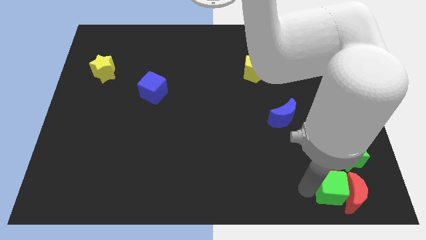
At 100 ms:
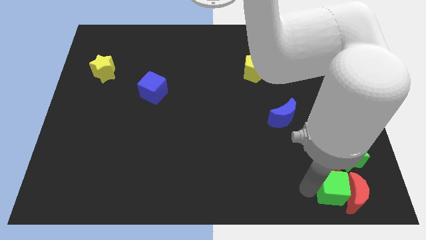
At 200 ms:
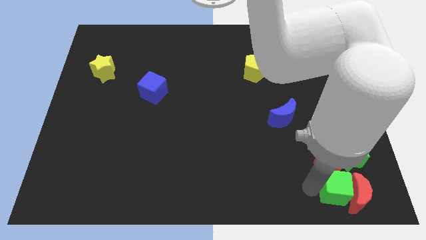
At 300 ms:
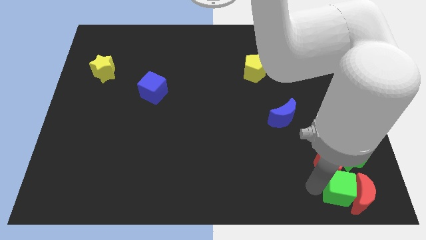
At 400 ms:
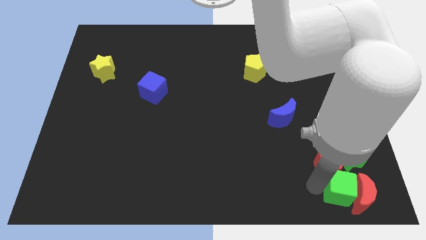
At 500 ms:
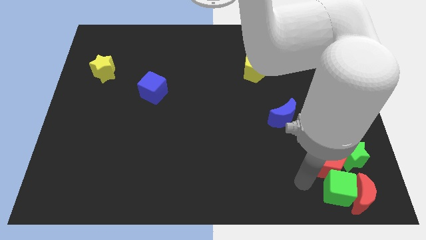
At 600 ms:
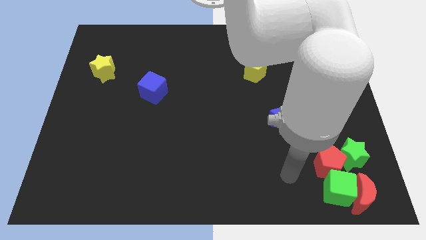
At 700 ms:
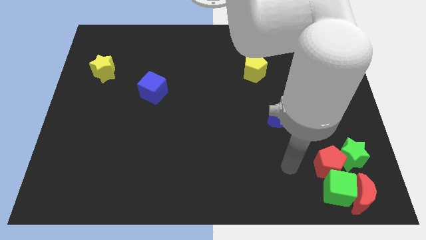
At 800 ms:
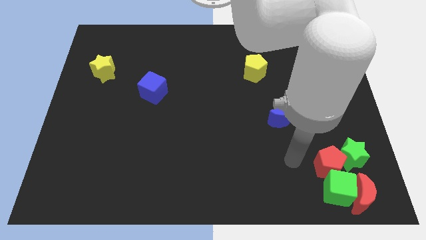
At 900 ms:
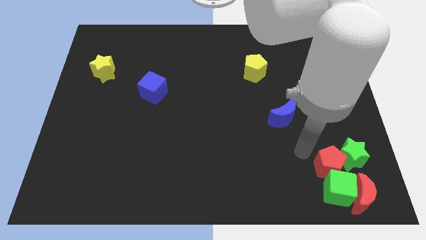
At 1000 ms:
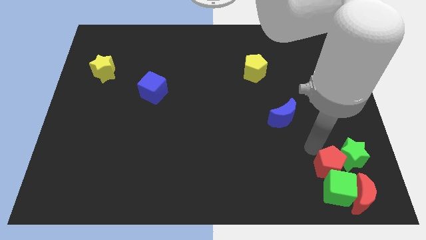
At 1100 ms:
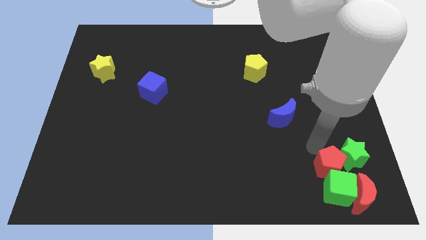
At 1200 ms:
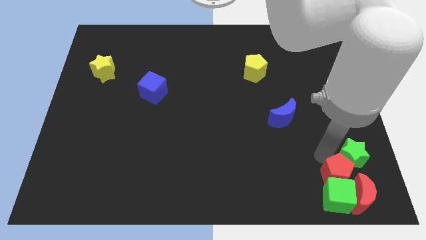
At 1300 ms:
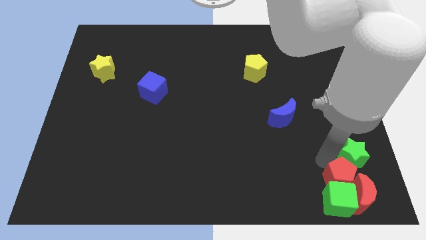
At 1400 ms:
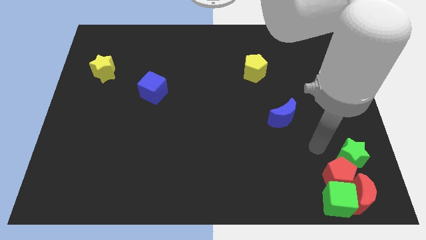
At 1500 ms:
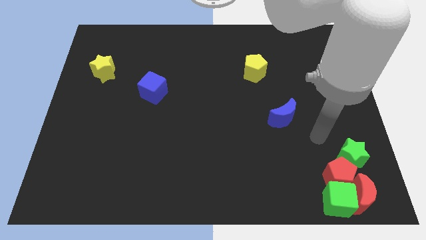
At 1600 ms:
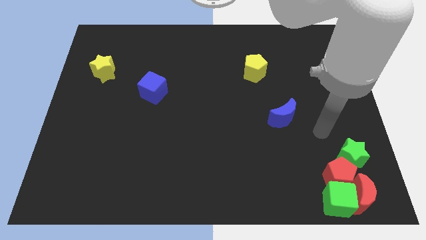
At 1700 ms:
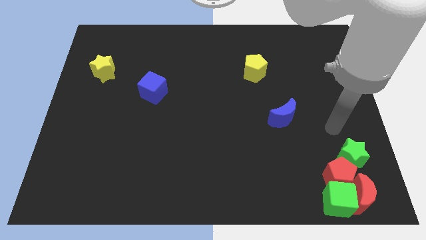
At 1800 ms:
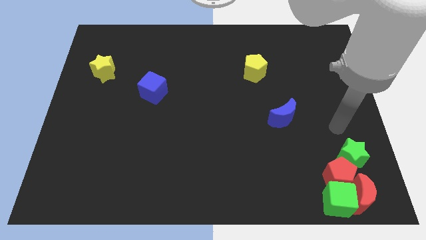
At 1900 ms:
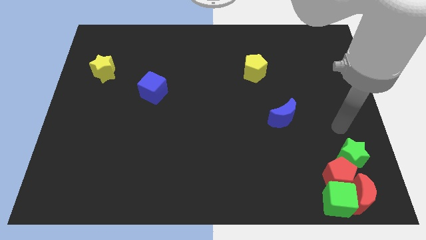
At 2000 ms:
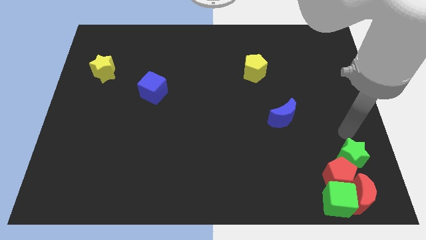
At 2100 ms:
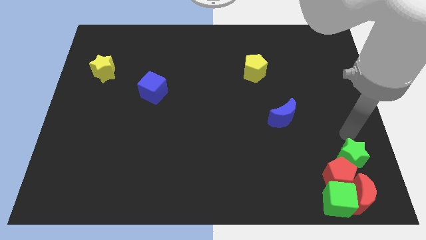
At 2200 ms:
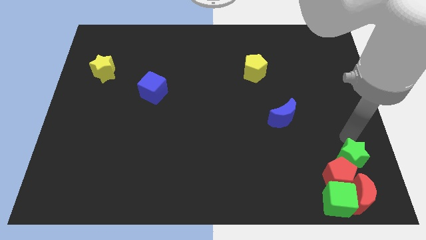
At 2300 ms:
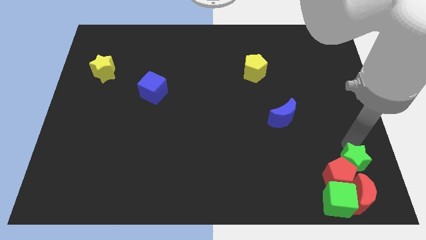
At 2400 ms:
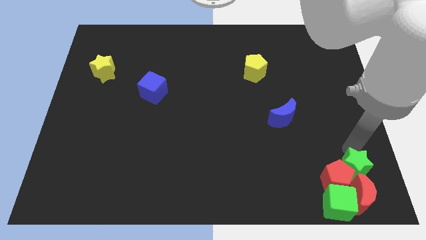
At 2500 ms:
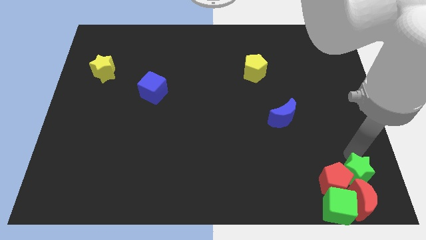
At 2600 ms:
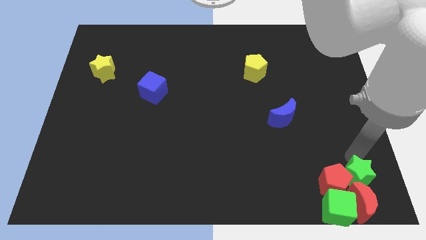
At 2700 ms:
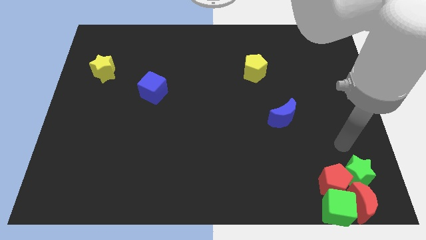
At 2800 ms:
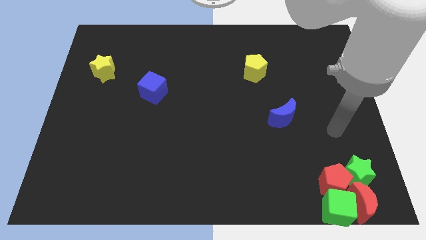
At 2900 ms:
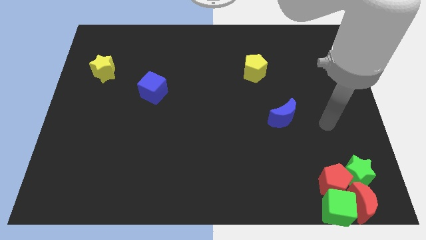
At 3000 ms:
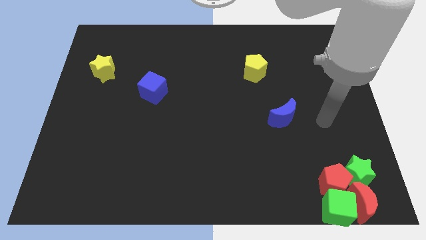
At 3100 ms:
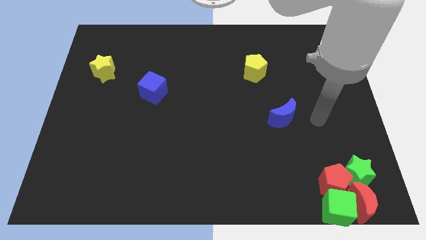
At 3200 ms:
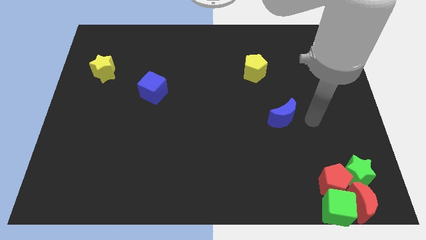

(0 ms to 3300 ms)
push the red pentagon and green star into the green cube and red crescent

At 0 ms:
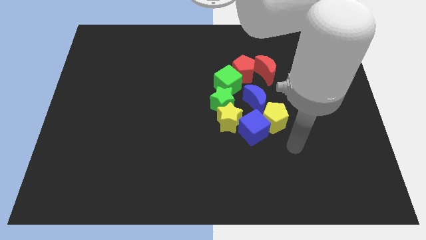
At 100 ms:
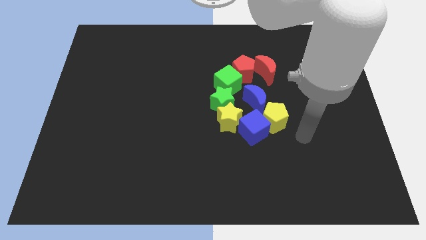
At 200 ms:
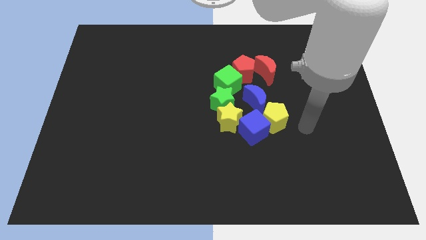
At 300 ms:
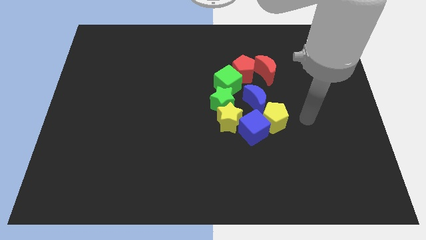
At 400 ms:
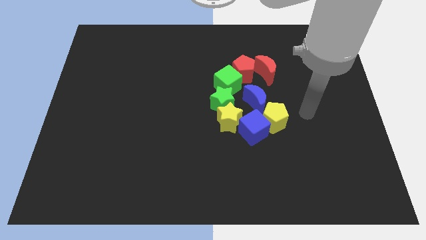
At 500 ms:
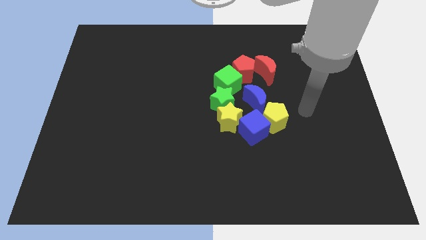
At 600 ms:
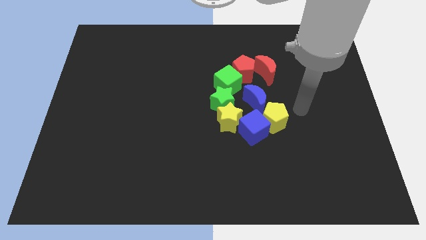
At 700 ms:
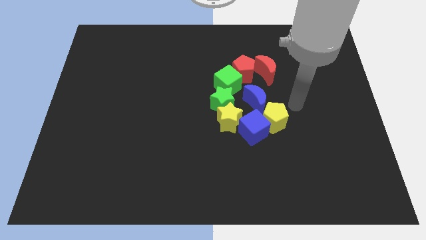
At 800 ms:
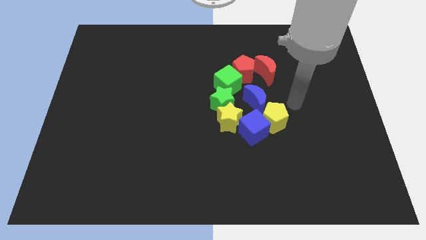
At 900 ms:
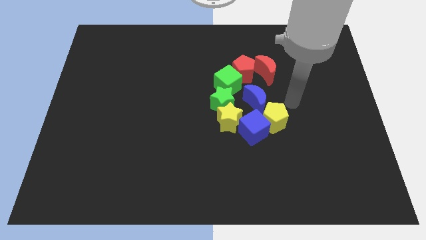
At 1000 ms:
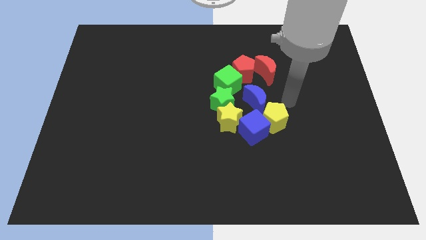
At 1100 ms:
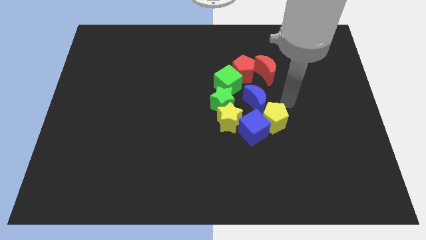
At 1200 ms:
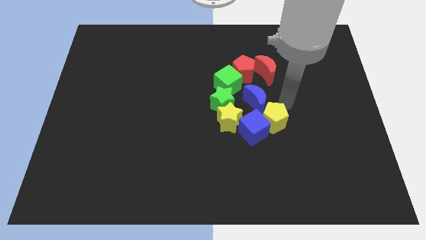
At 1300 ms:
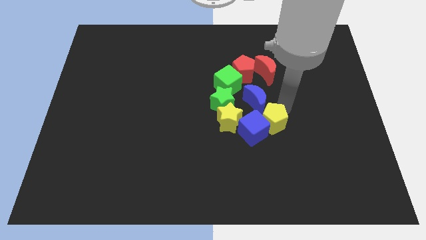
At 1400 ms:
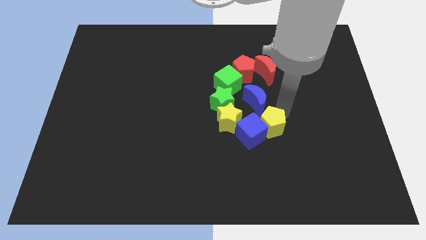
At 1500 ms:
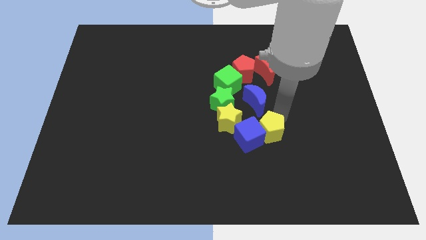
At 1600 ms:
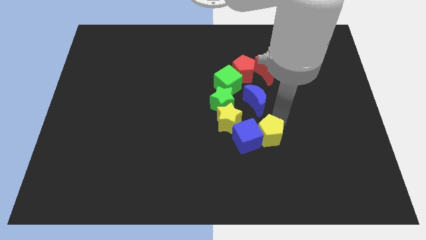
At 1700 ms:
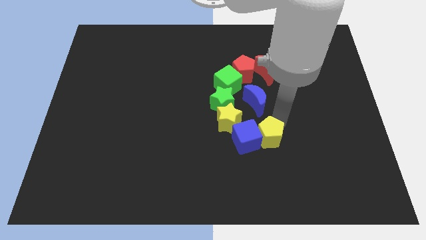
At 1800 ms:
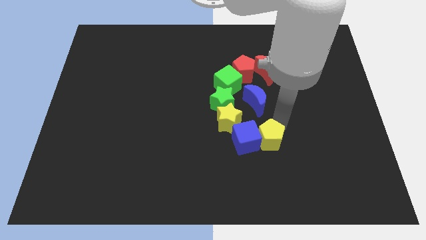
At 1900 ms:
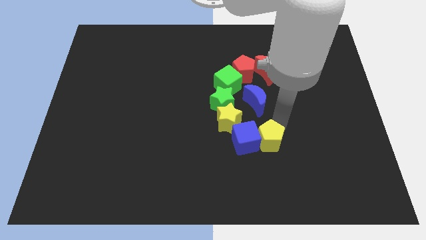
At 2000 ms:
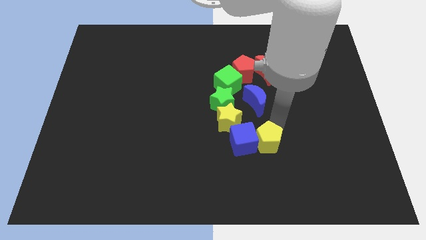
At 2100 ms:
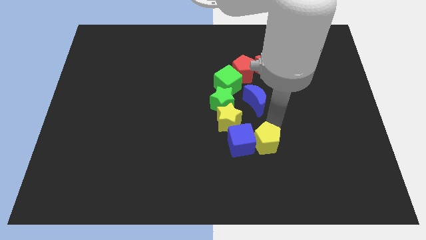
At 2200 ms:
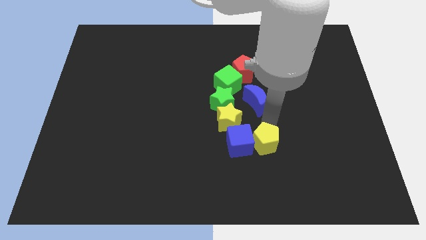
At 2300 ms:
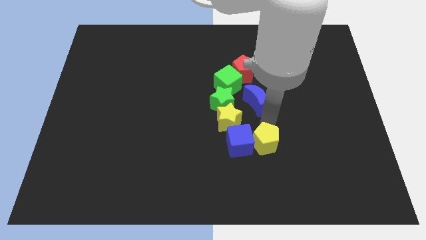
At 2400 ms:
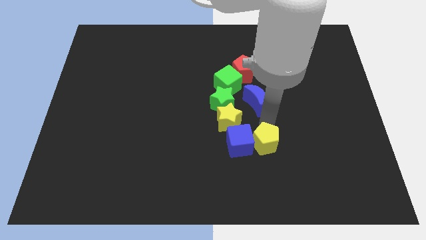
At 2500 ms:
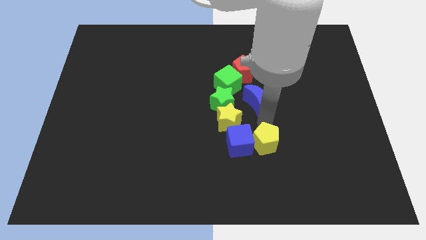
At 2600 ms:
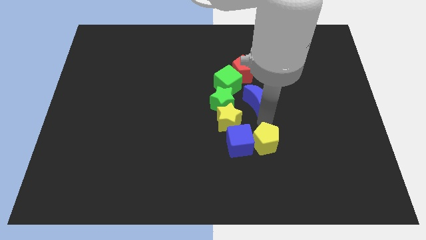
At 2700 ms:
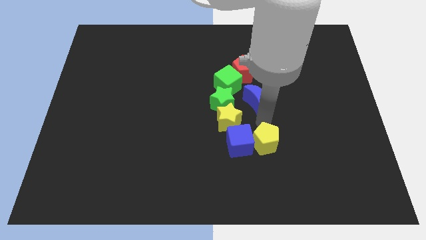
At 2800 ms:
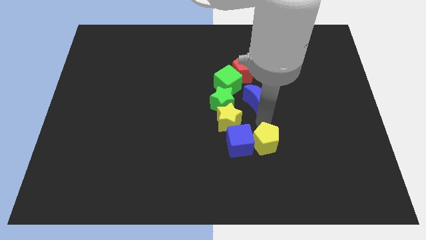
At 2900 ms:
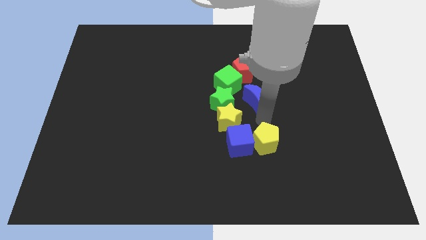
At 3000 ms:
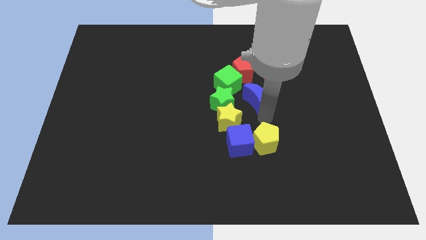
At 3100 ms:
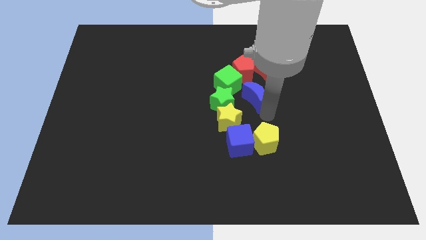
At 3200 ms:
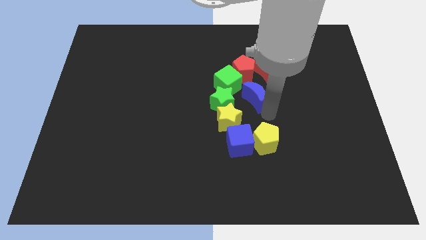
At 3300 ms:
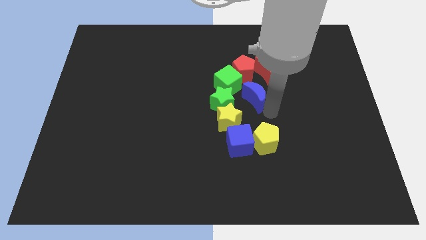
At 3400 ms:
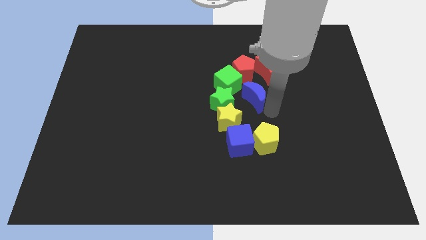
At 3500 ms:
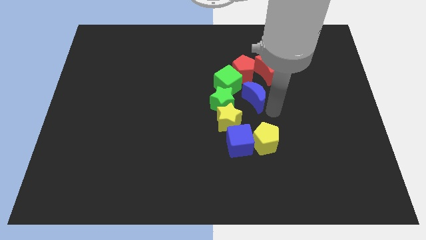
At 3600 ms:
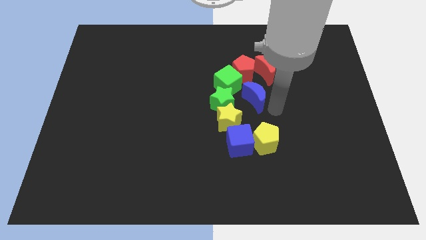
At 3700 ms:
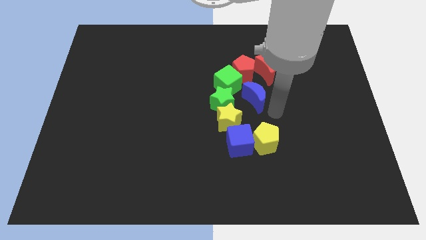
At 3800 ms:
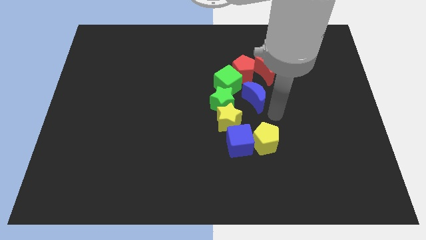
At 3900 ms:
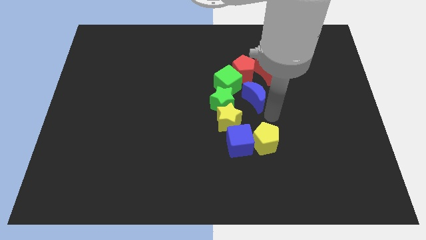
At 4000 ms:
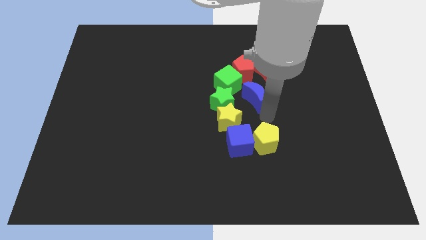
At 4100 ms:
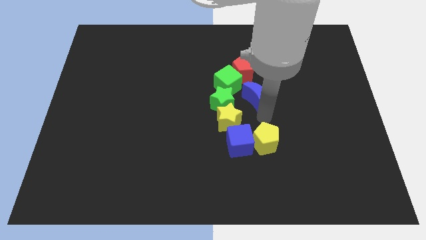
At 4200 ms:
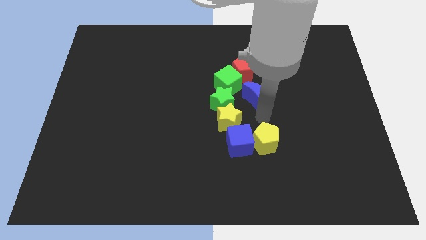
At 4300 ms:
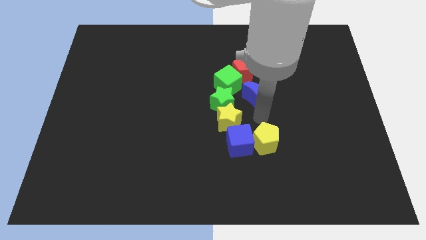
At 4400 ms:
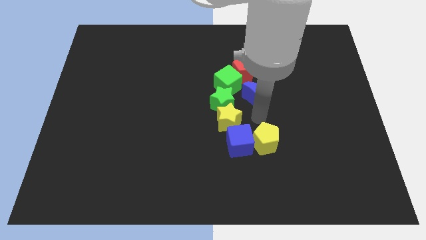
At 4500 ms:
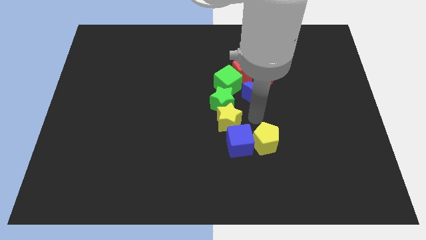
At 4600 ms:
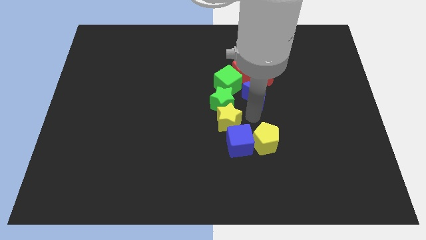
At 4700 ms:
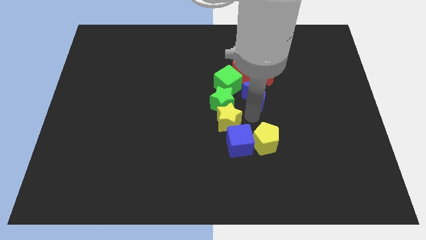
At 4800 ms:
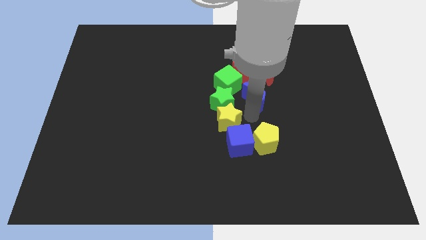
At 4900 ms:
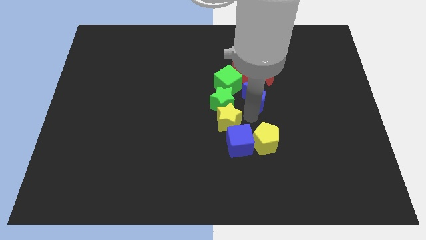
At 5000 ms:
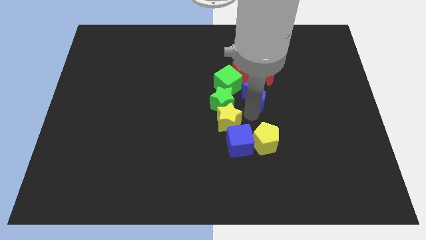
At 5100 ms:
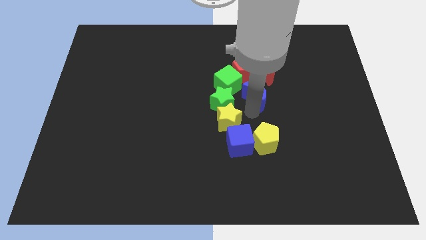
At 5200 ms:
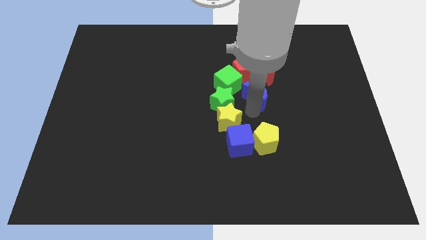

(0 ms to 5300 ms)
push blue cube with yellow pentagon

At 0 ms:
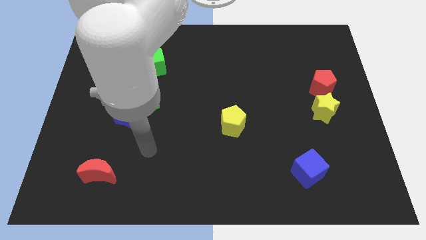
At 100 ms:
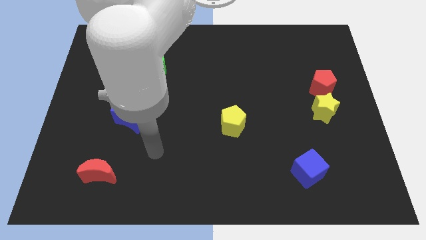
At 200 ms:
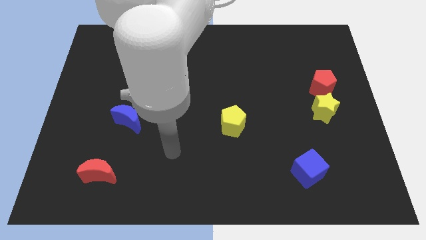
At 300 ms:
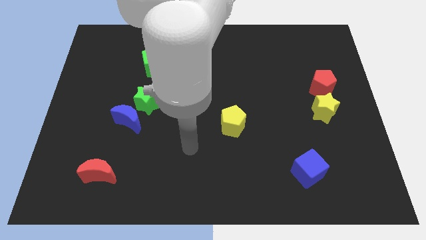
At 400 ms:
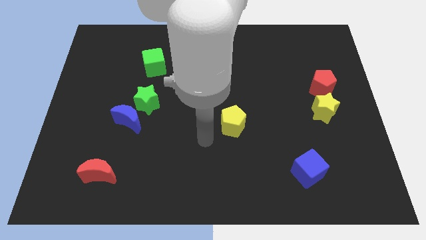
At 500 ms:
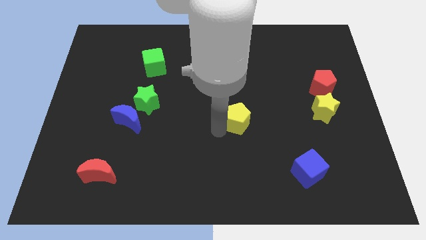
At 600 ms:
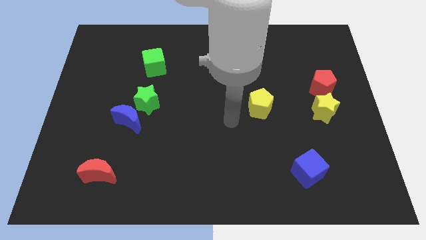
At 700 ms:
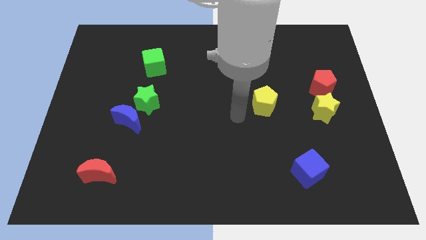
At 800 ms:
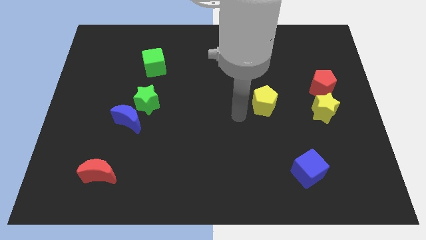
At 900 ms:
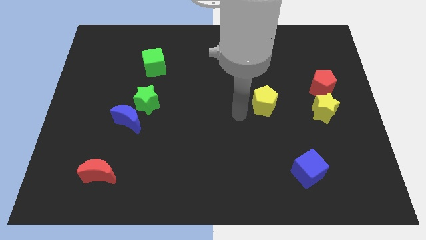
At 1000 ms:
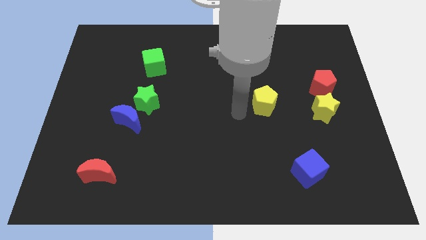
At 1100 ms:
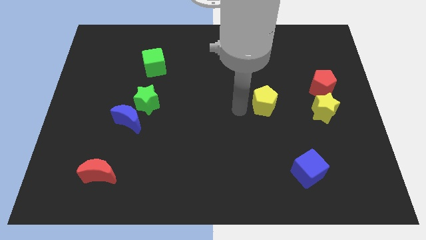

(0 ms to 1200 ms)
move the yellow pentagon to the left side of the yellow star
